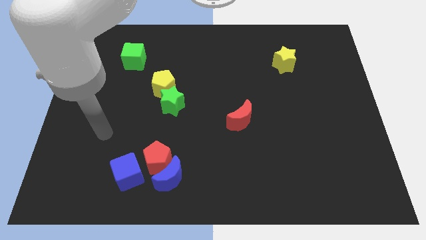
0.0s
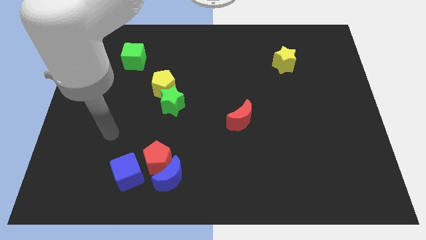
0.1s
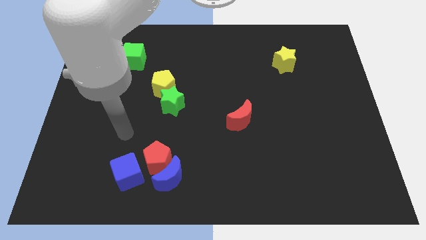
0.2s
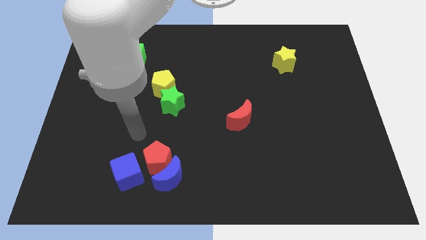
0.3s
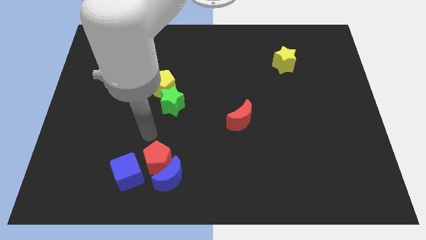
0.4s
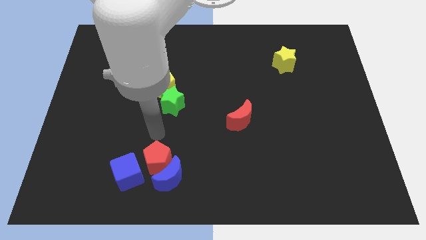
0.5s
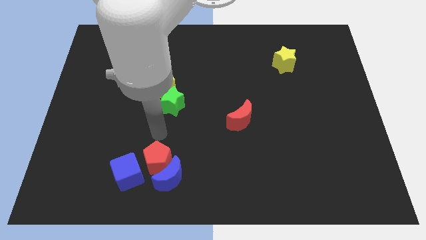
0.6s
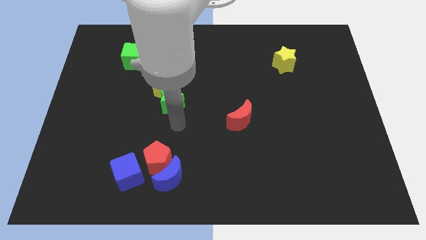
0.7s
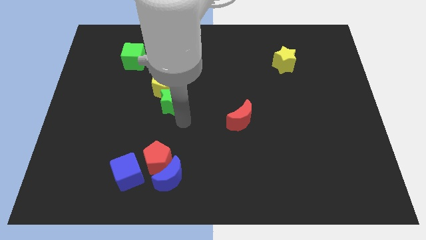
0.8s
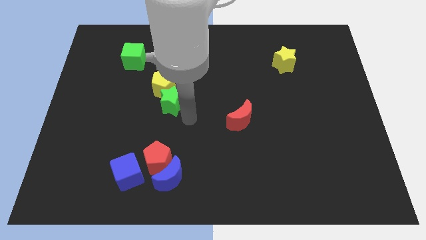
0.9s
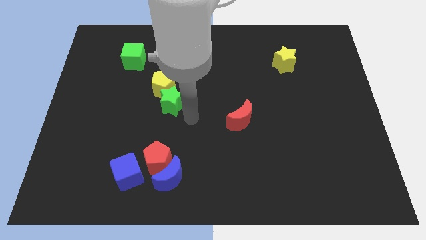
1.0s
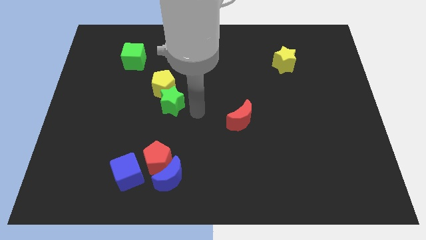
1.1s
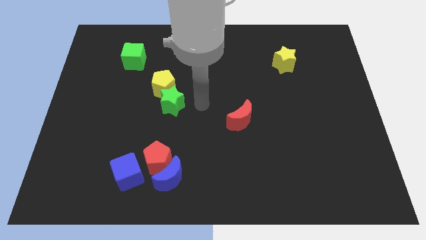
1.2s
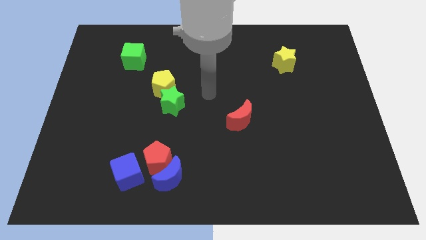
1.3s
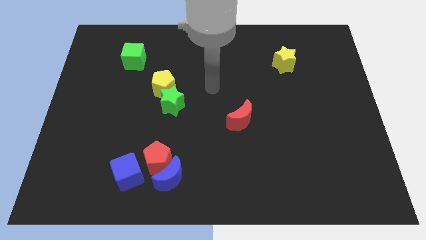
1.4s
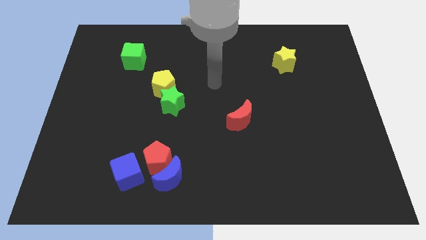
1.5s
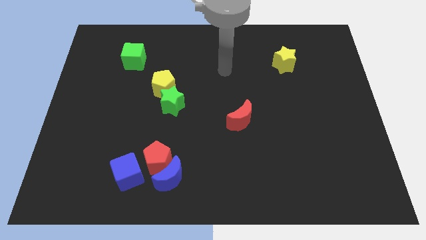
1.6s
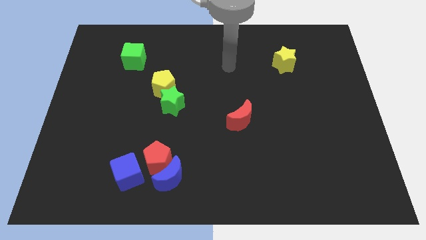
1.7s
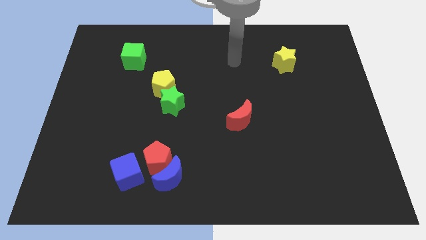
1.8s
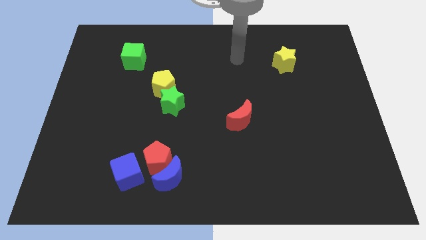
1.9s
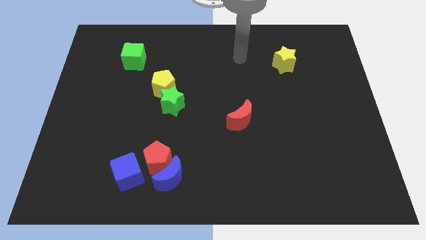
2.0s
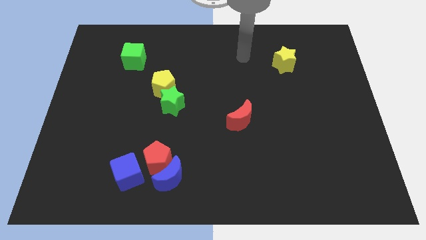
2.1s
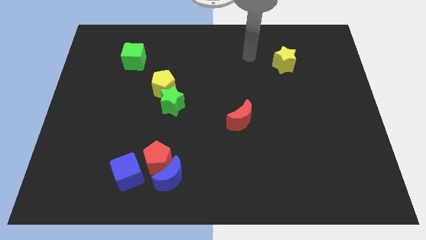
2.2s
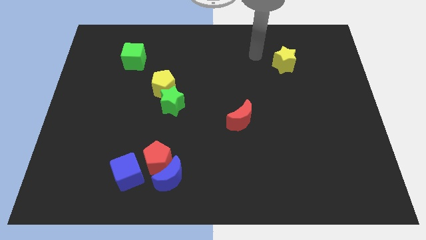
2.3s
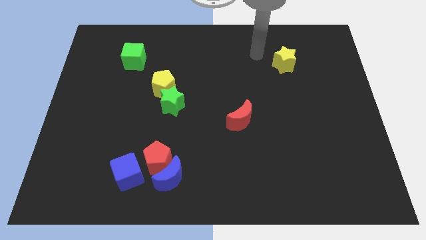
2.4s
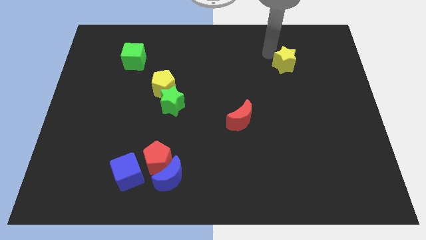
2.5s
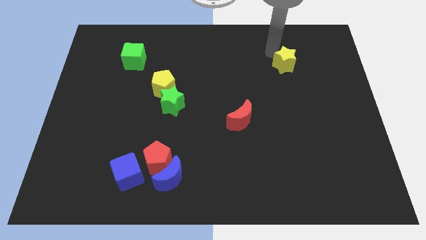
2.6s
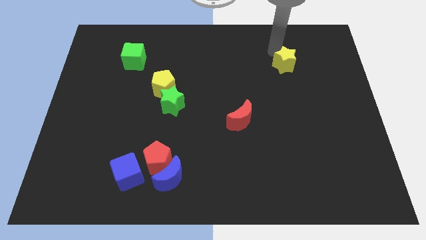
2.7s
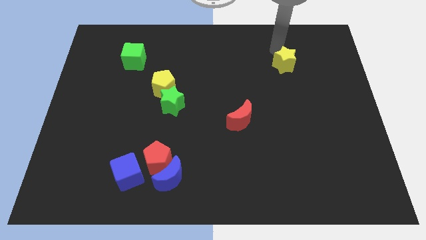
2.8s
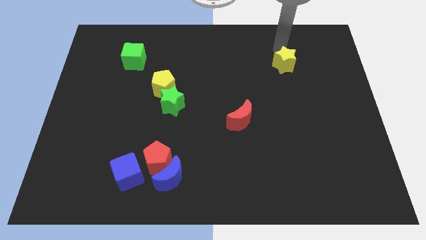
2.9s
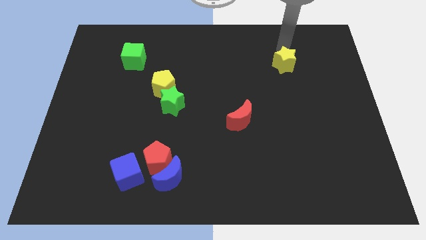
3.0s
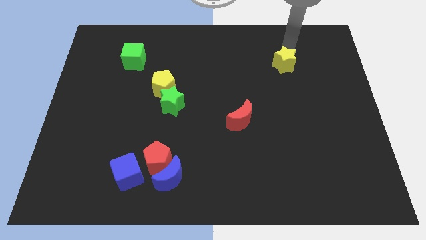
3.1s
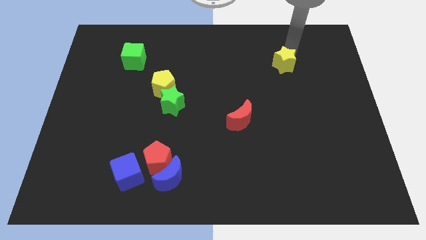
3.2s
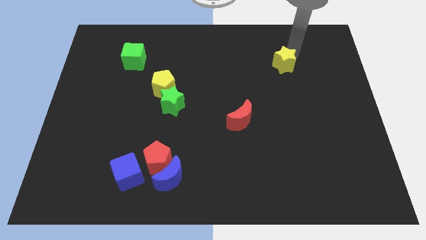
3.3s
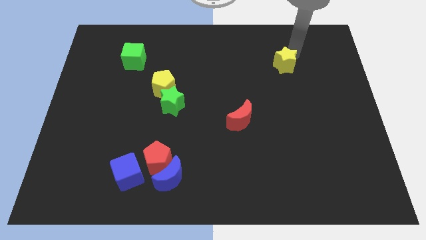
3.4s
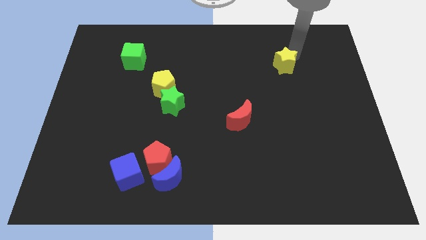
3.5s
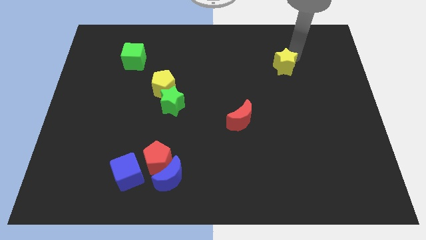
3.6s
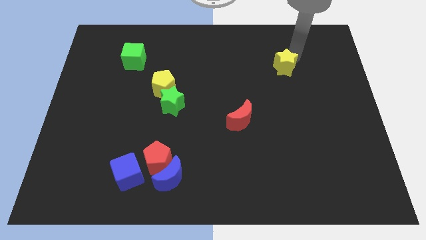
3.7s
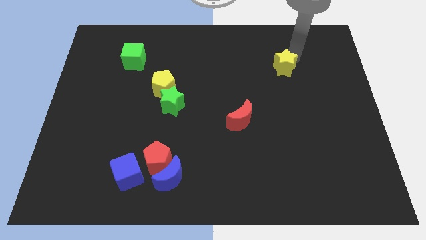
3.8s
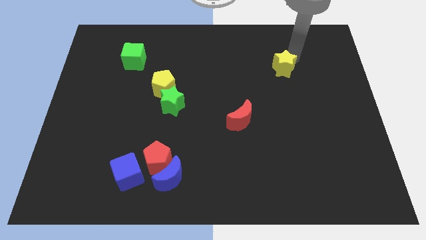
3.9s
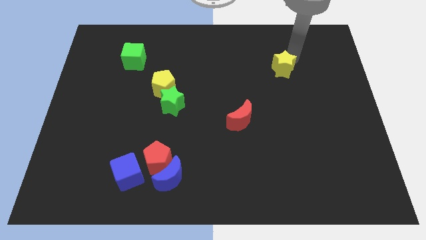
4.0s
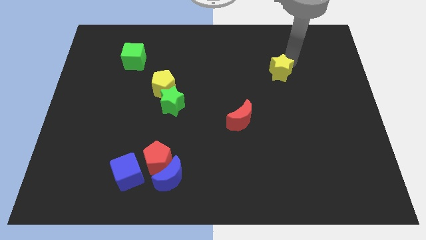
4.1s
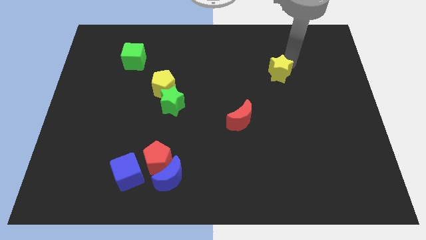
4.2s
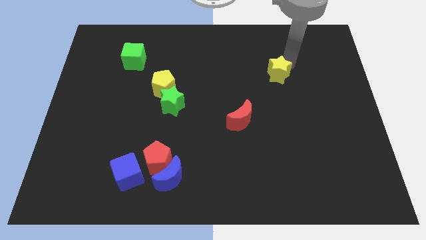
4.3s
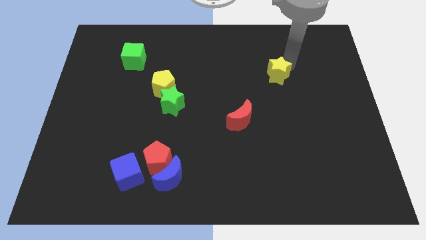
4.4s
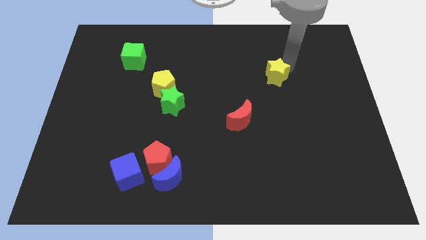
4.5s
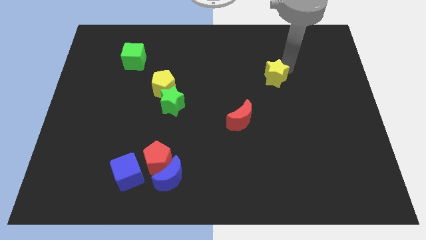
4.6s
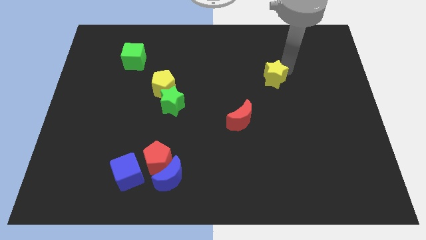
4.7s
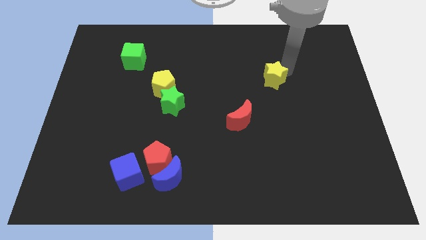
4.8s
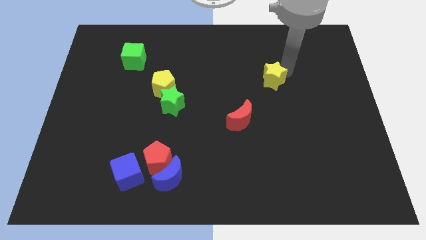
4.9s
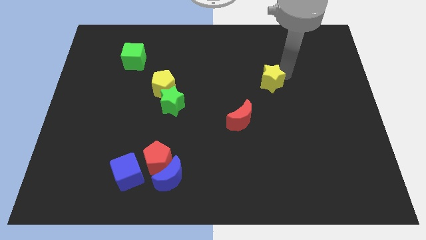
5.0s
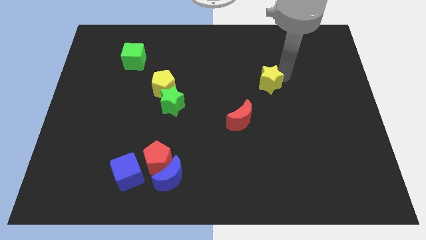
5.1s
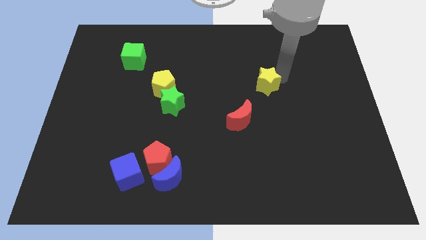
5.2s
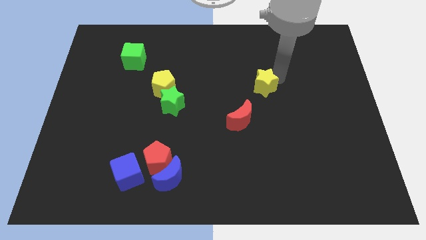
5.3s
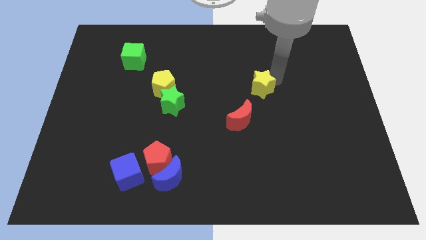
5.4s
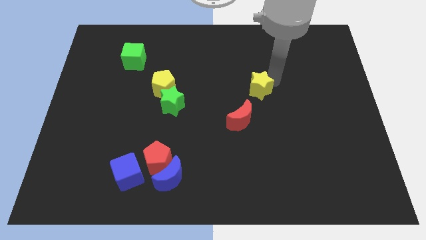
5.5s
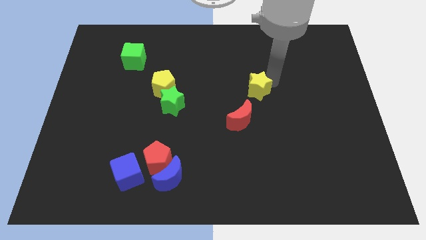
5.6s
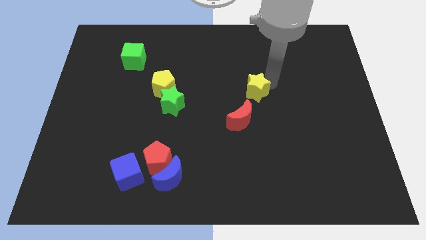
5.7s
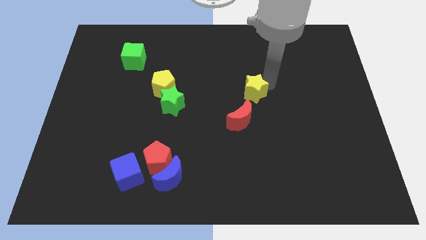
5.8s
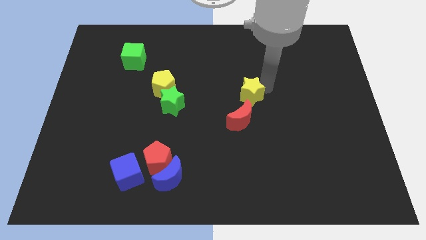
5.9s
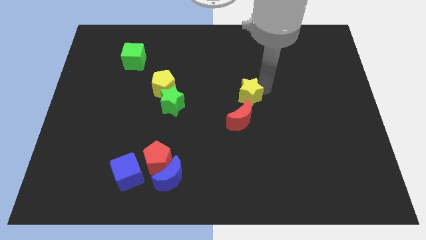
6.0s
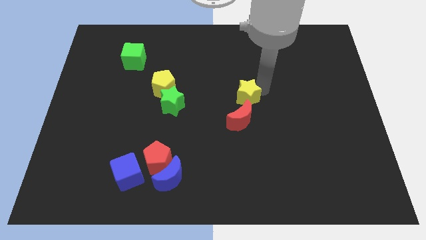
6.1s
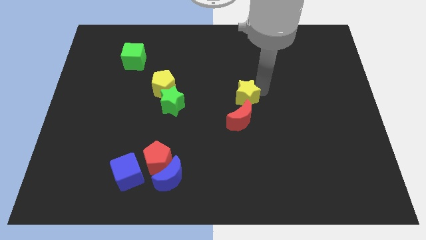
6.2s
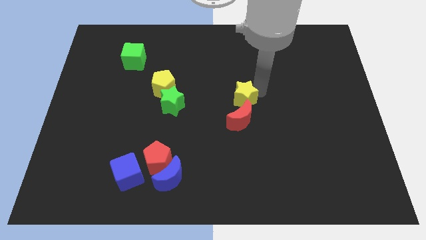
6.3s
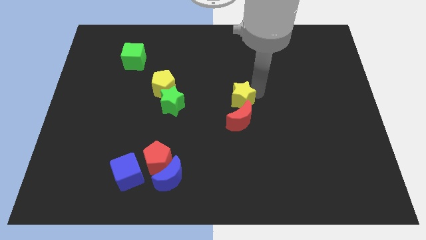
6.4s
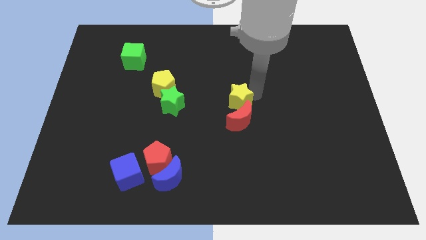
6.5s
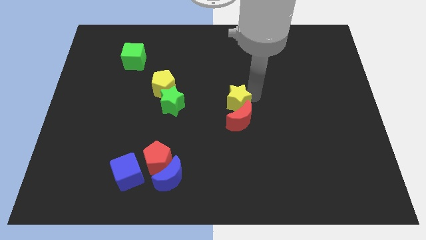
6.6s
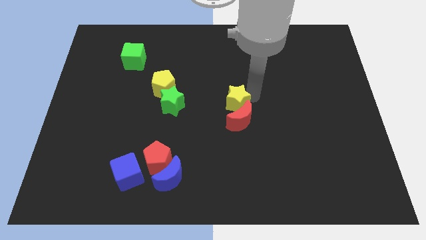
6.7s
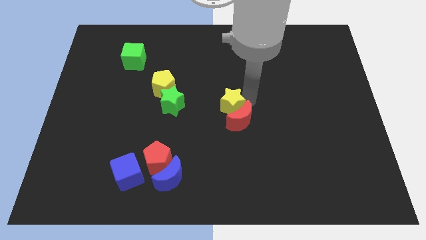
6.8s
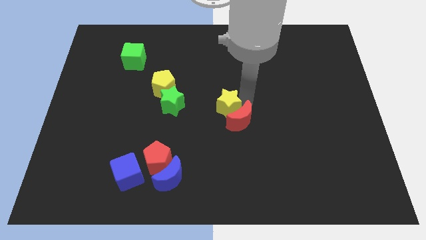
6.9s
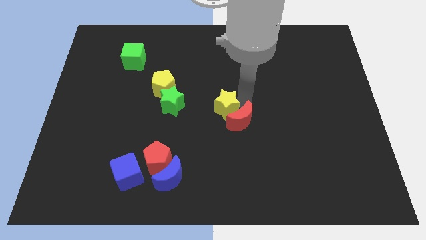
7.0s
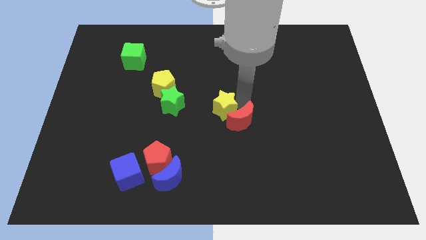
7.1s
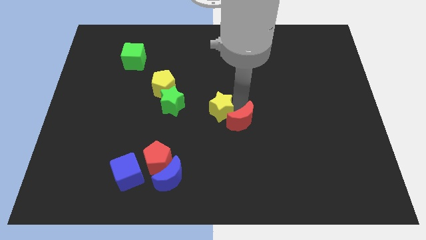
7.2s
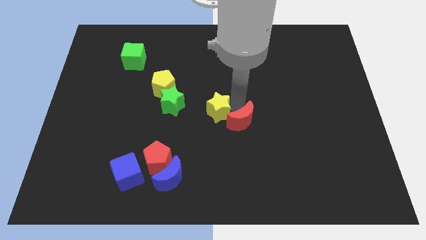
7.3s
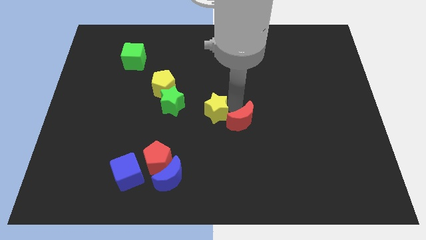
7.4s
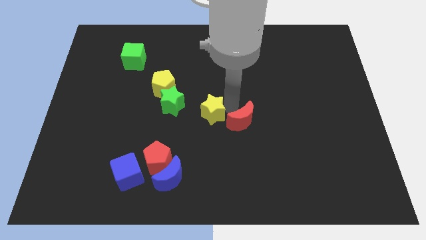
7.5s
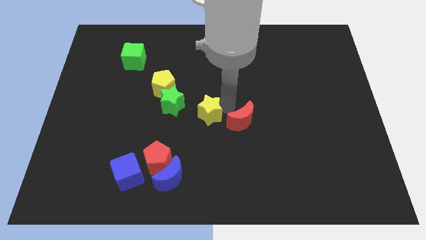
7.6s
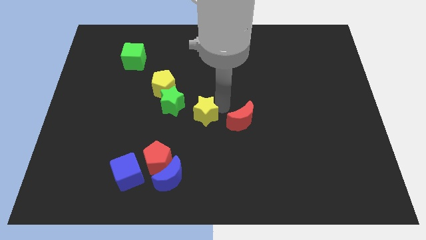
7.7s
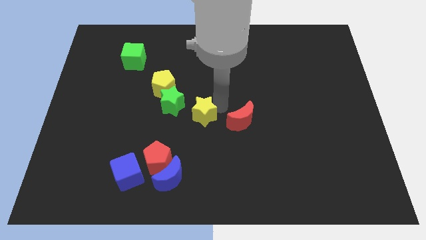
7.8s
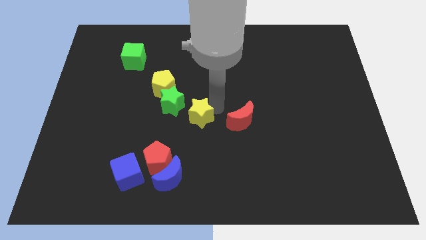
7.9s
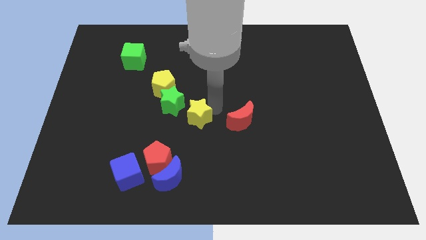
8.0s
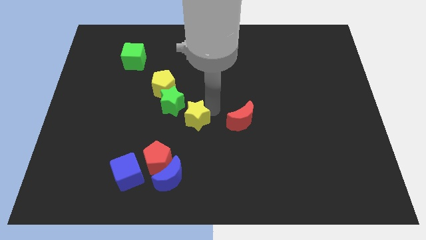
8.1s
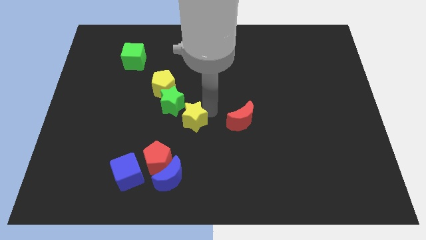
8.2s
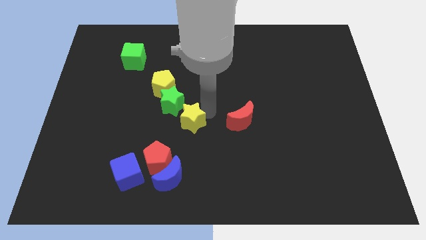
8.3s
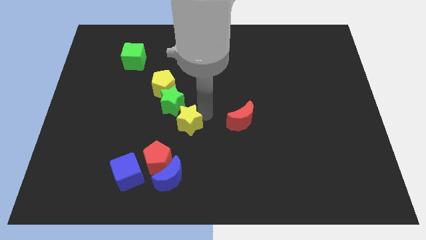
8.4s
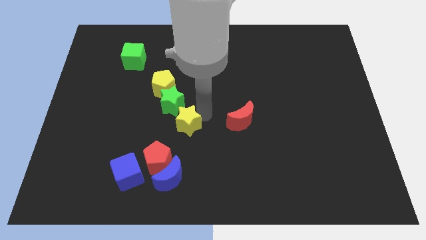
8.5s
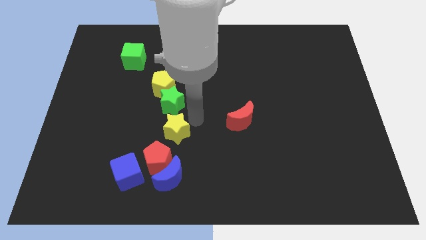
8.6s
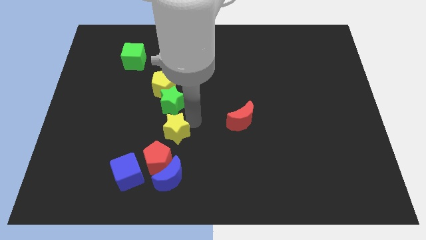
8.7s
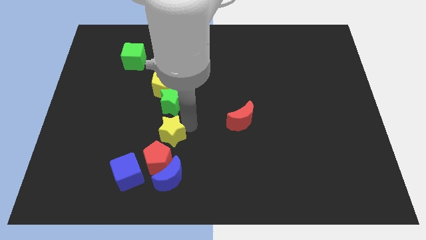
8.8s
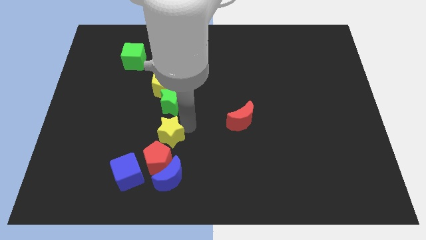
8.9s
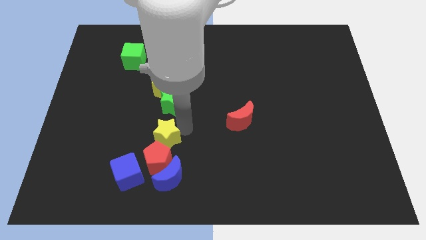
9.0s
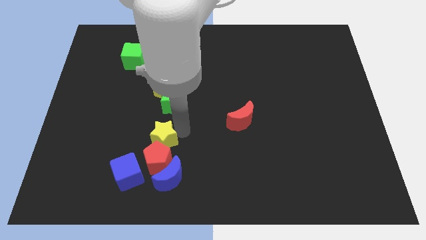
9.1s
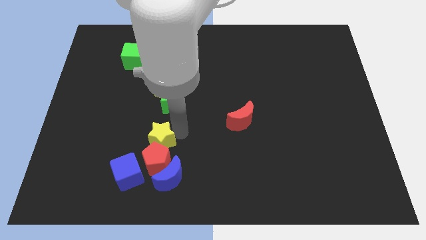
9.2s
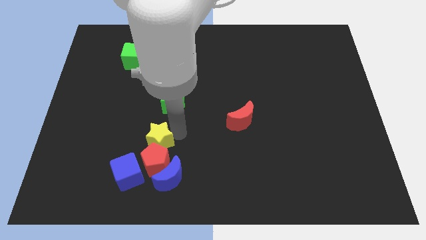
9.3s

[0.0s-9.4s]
slide the yellow star to the red pentagon
